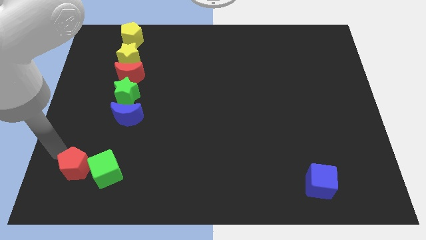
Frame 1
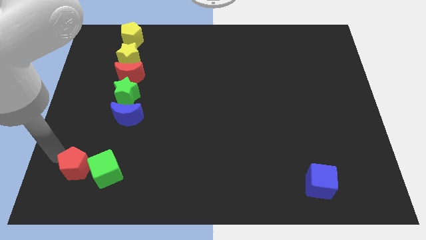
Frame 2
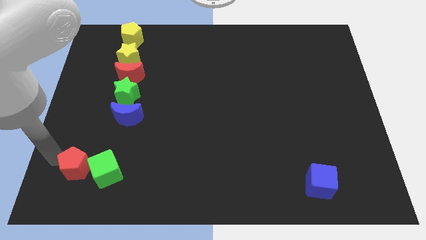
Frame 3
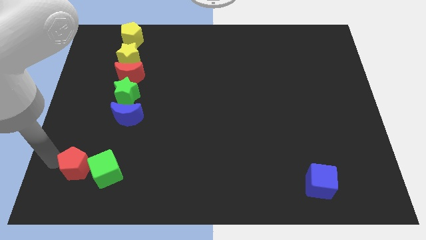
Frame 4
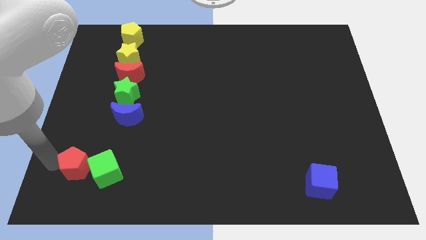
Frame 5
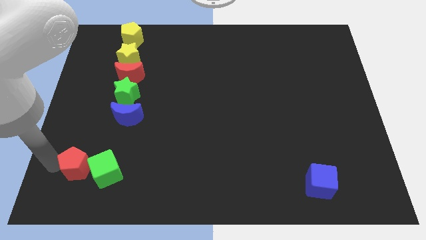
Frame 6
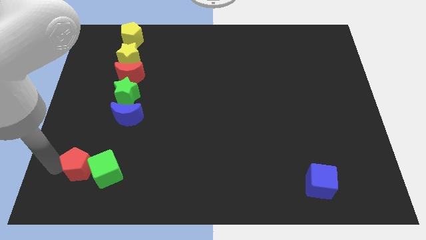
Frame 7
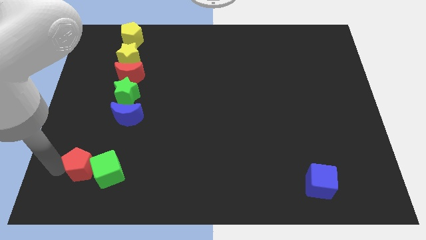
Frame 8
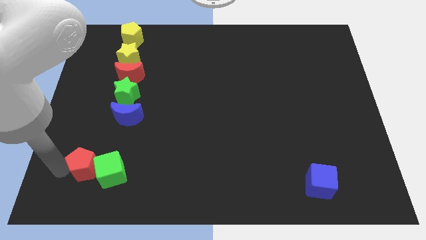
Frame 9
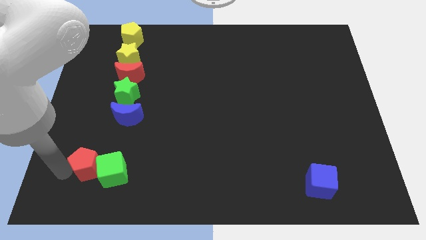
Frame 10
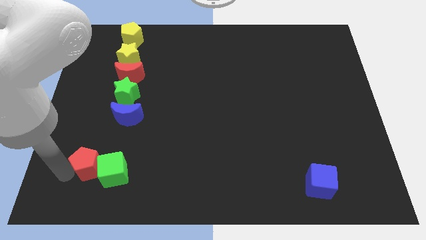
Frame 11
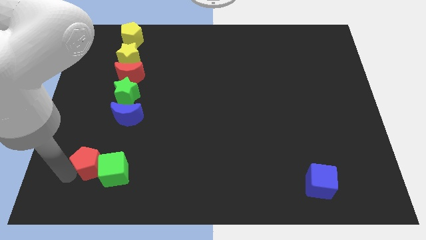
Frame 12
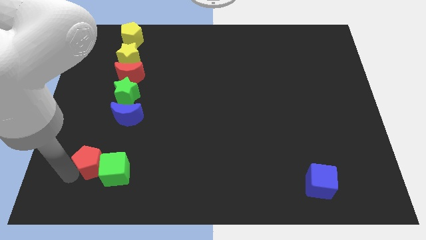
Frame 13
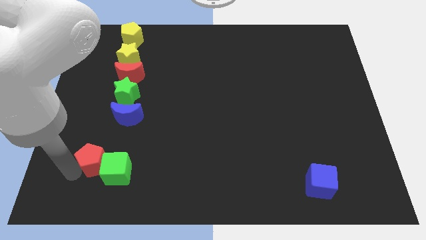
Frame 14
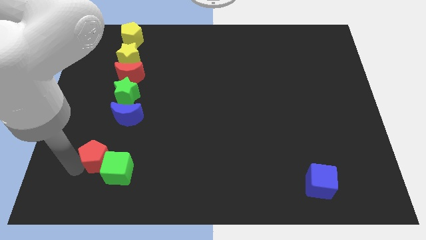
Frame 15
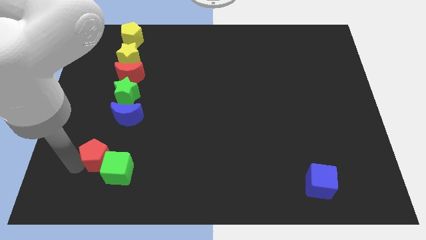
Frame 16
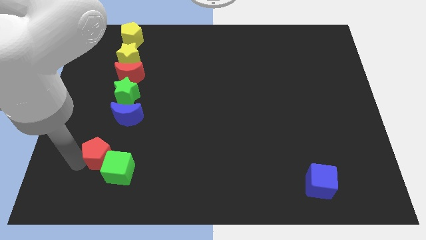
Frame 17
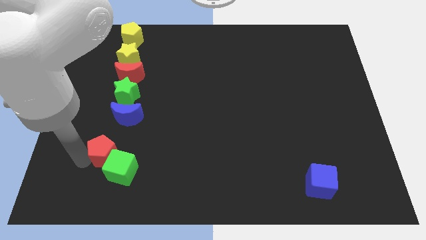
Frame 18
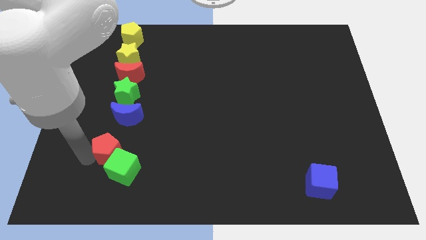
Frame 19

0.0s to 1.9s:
move both green cube and red pentagon to bottom of the board

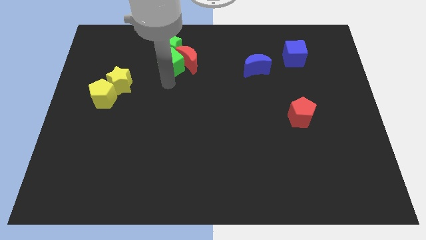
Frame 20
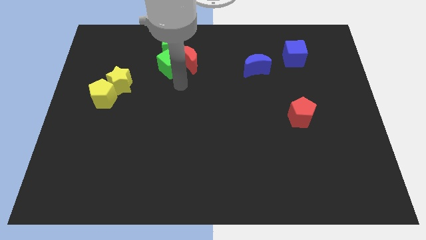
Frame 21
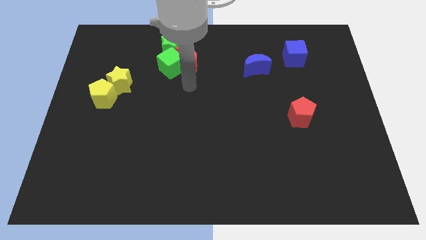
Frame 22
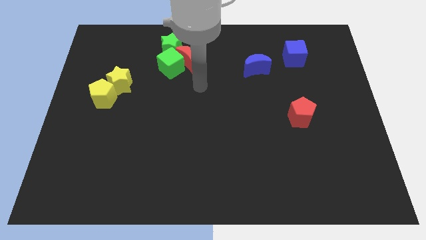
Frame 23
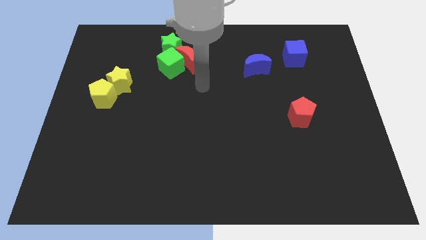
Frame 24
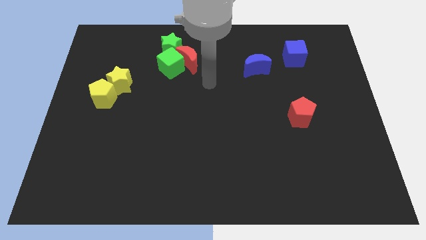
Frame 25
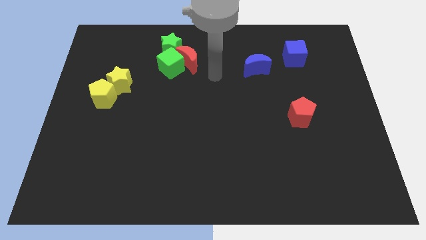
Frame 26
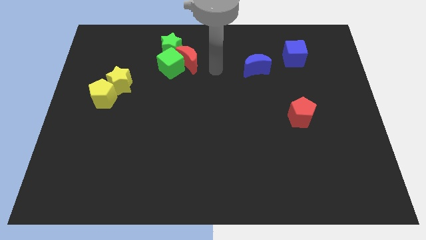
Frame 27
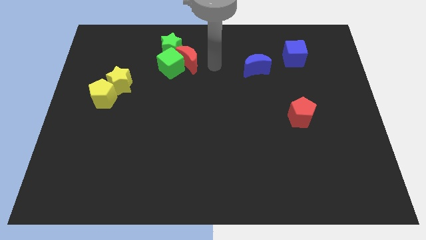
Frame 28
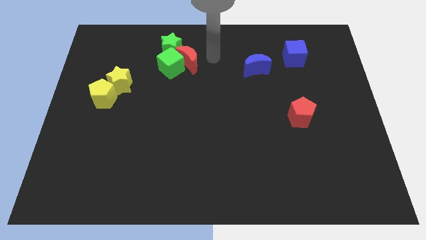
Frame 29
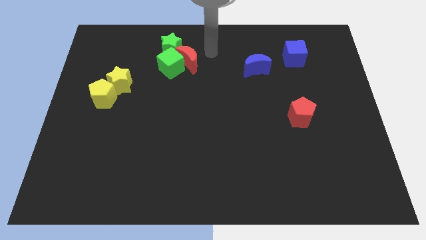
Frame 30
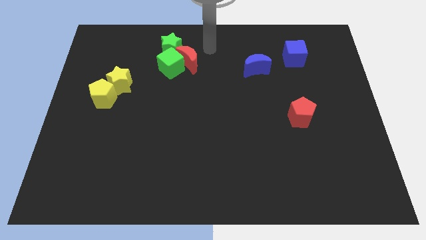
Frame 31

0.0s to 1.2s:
place the arm to the right of the red moon

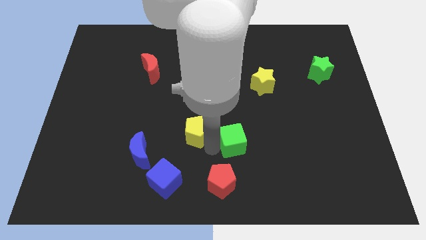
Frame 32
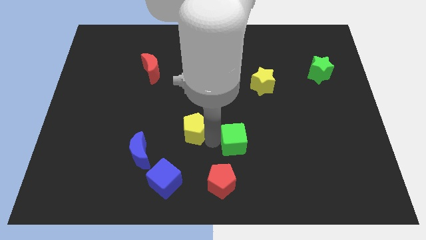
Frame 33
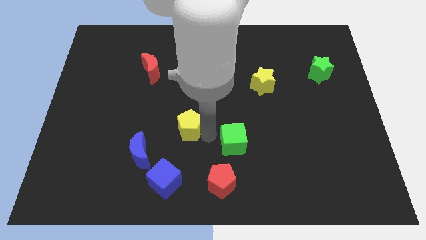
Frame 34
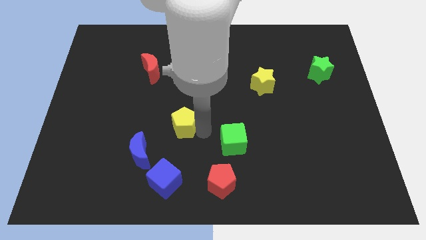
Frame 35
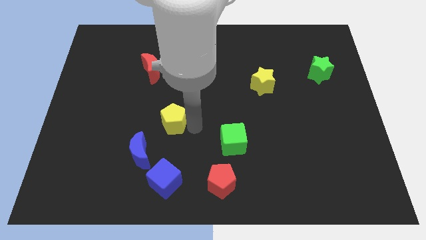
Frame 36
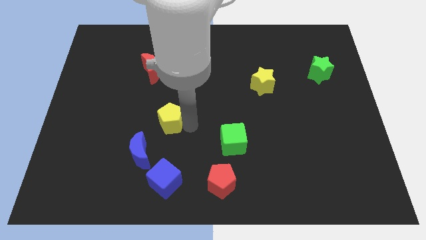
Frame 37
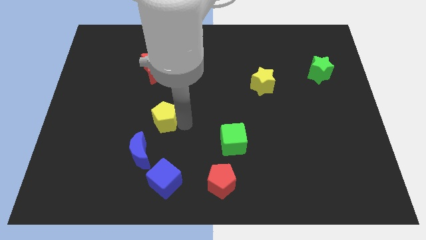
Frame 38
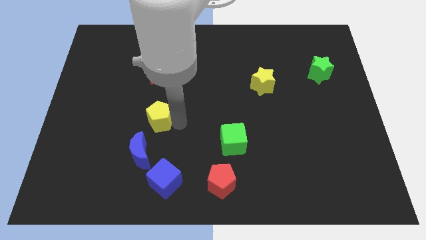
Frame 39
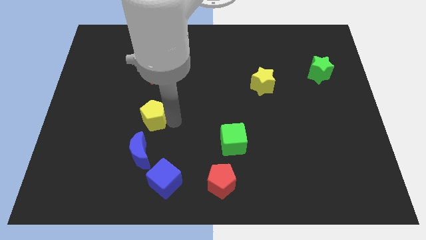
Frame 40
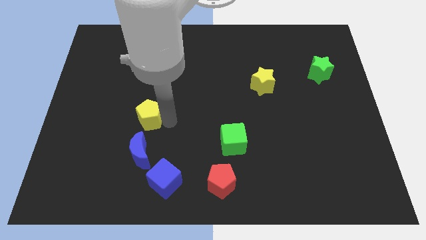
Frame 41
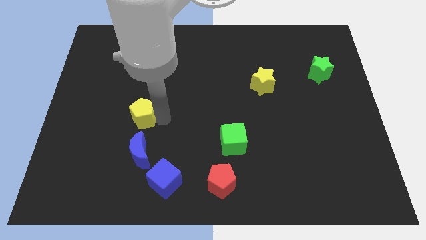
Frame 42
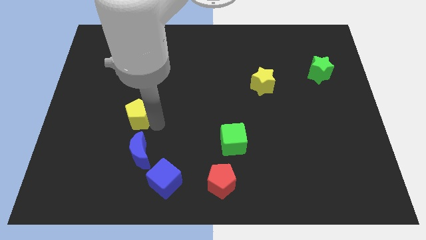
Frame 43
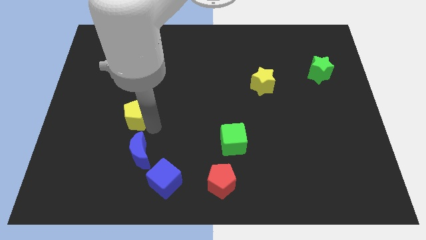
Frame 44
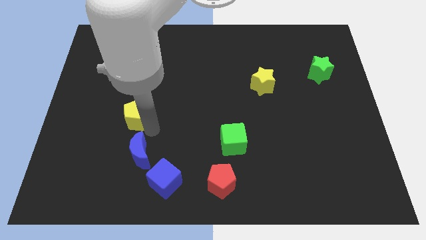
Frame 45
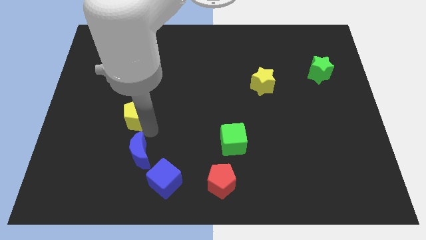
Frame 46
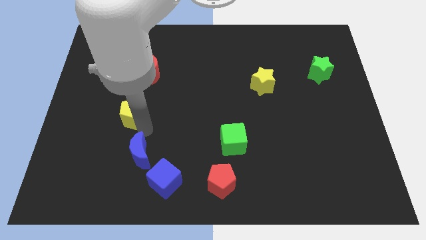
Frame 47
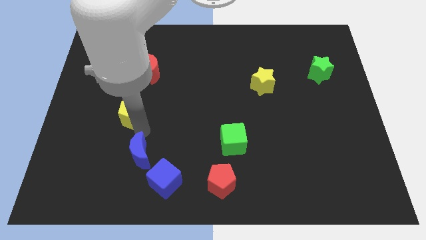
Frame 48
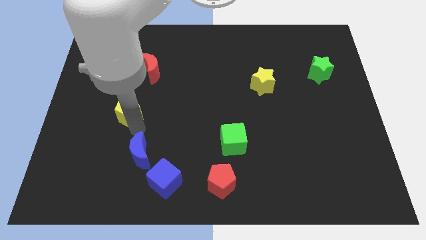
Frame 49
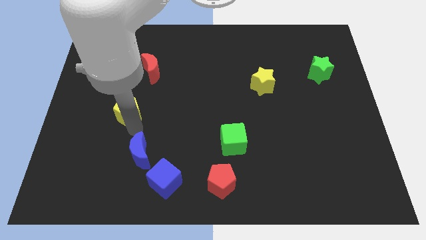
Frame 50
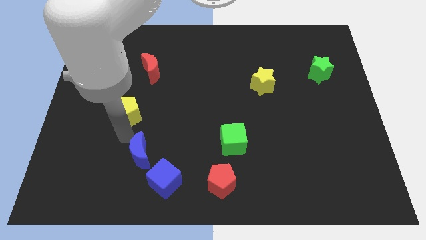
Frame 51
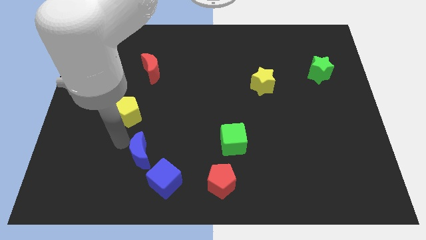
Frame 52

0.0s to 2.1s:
place the yellow pentagon at the top of the blue moon

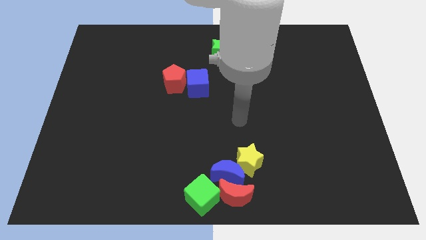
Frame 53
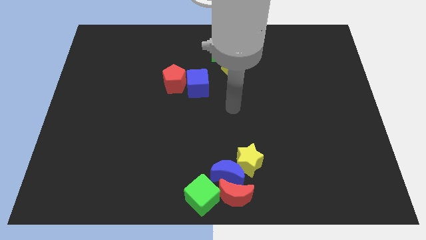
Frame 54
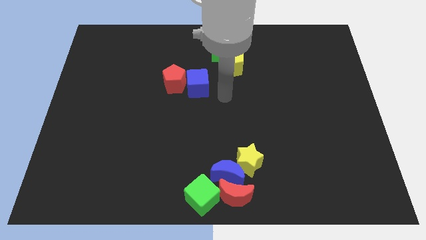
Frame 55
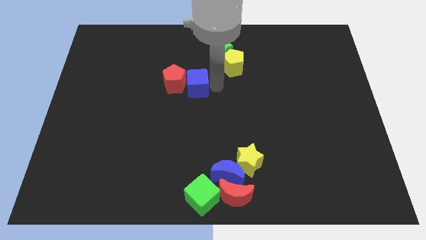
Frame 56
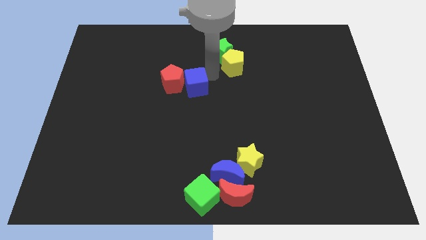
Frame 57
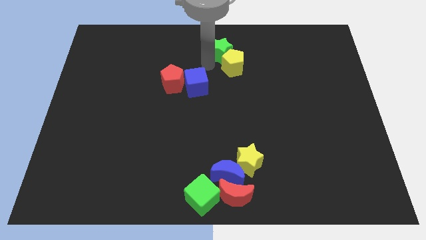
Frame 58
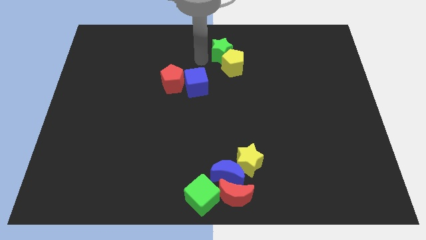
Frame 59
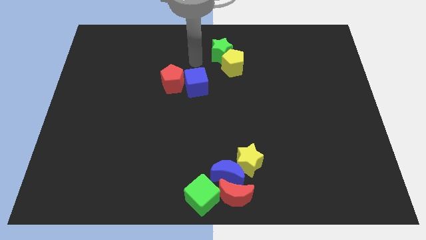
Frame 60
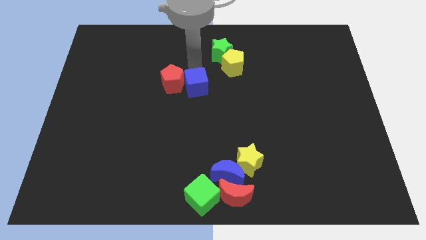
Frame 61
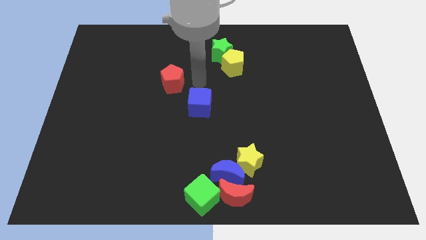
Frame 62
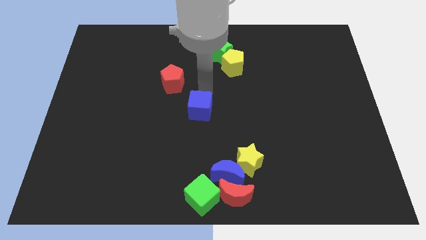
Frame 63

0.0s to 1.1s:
move the blue cube to the center of the board

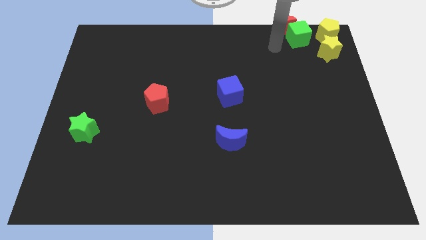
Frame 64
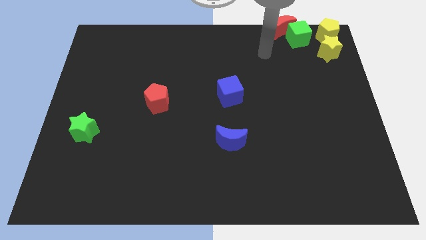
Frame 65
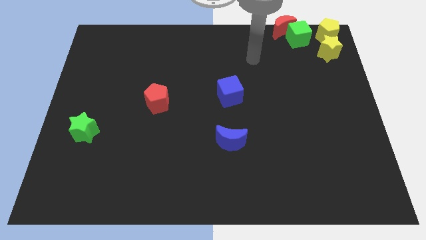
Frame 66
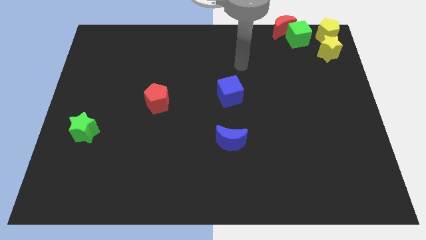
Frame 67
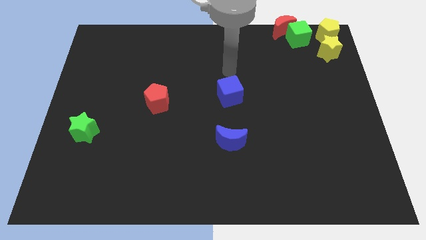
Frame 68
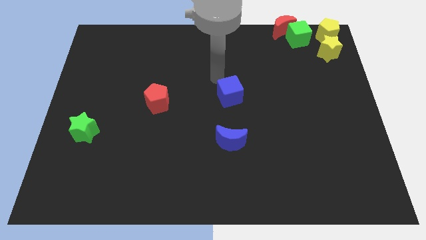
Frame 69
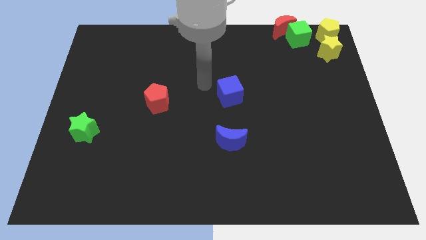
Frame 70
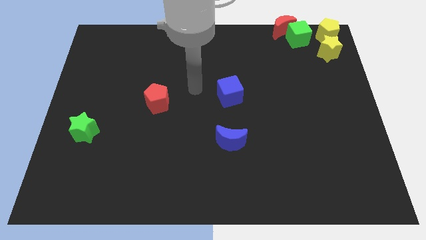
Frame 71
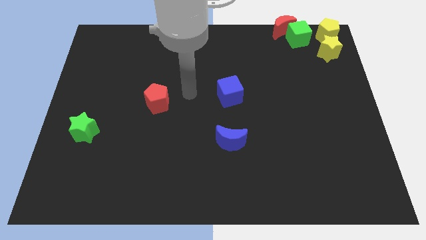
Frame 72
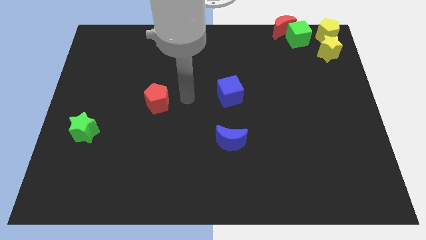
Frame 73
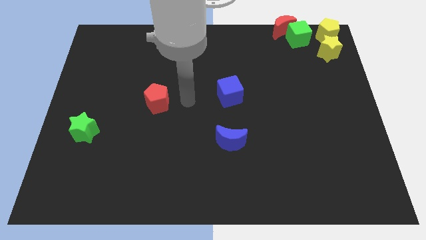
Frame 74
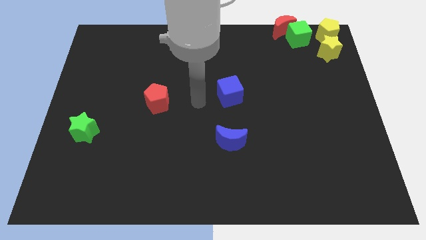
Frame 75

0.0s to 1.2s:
move your hand towards the center of the board

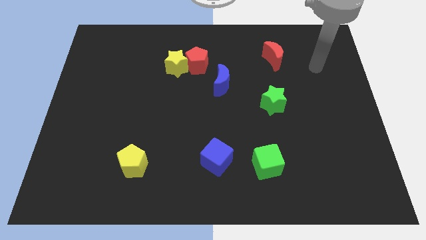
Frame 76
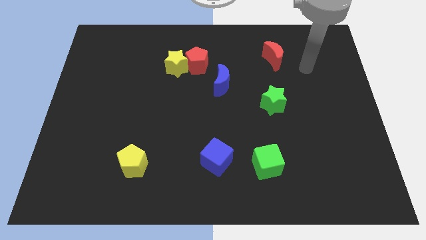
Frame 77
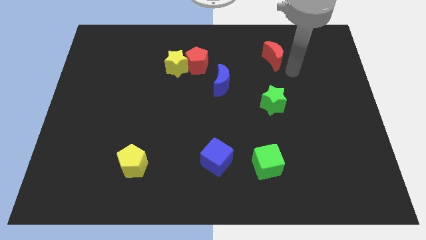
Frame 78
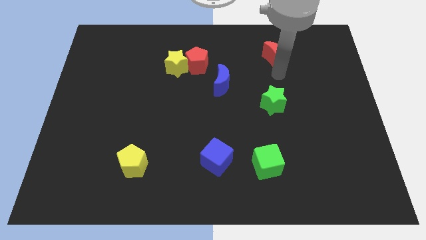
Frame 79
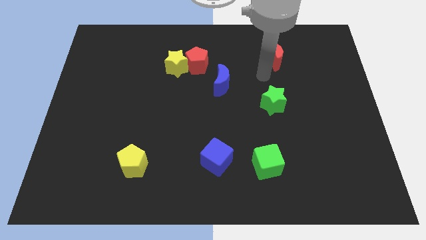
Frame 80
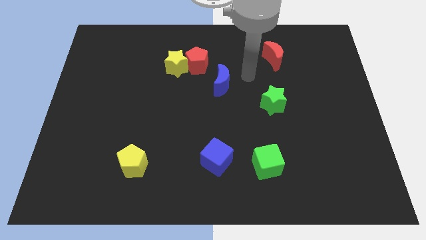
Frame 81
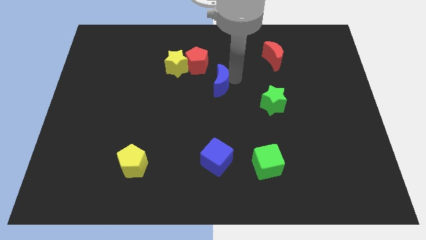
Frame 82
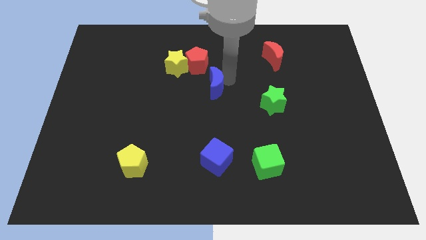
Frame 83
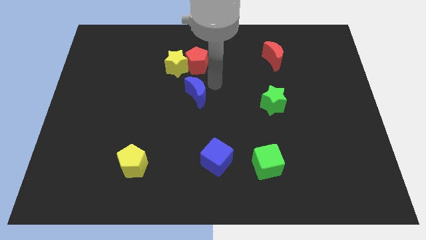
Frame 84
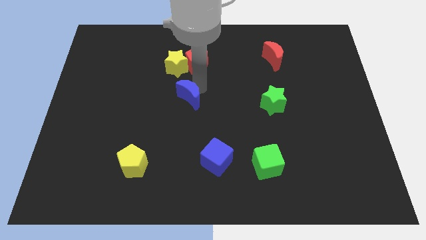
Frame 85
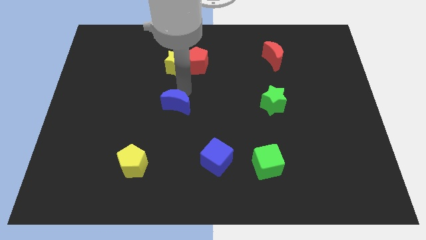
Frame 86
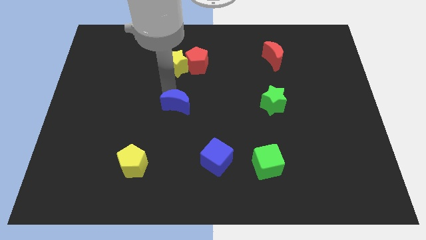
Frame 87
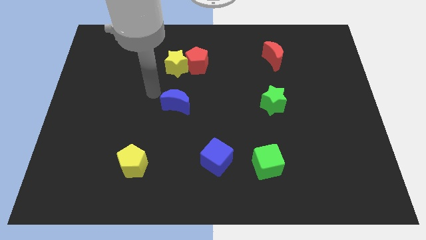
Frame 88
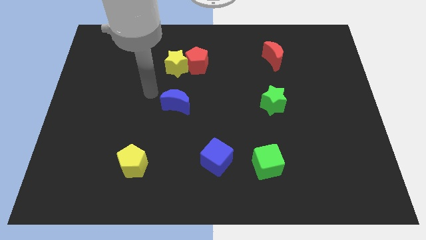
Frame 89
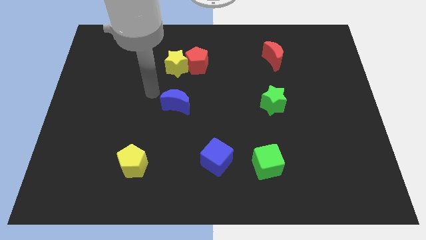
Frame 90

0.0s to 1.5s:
move the blue crescent towards the left center of the board

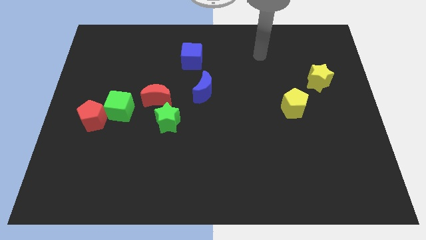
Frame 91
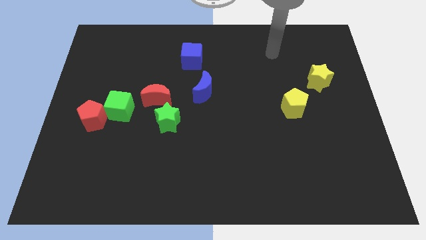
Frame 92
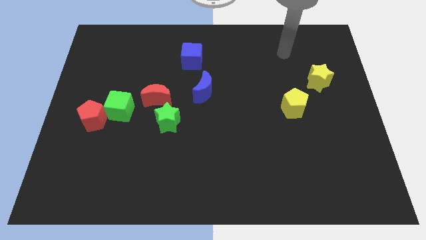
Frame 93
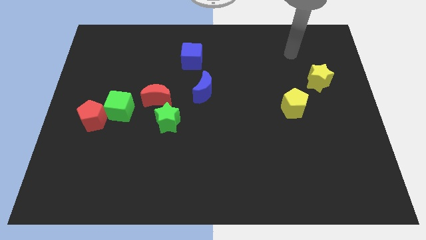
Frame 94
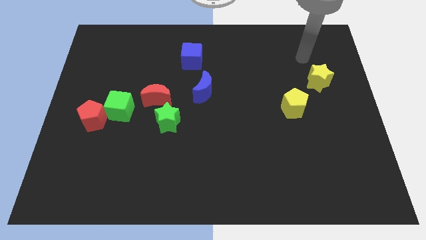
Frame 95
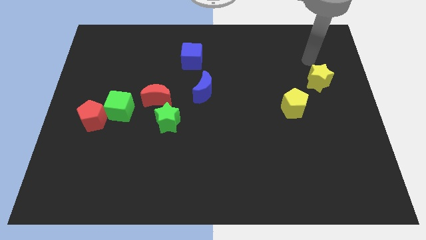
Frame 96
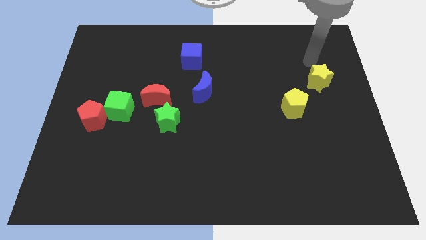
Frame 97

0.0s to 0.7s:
move your arm on top yellow star
